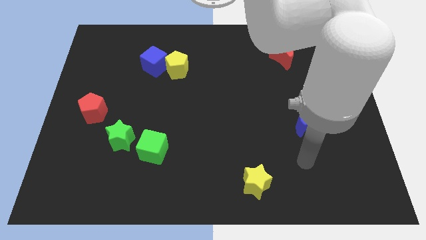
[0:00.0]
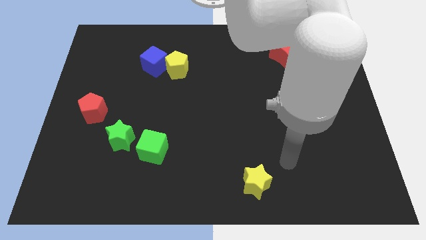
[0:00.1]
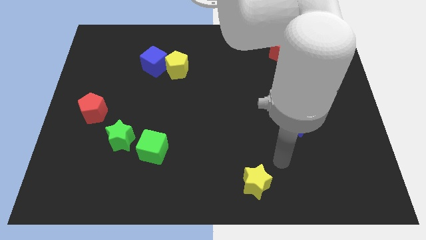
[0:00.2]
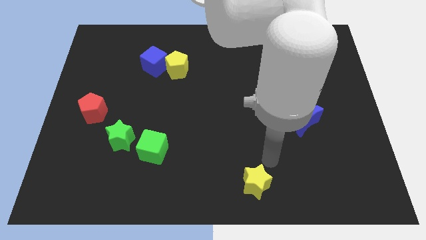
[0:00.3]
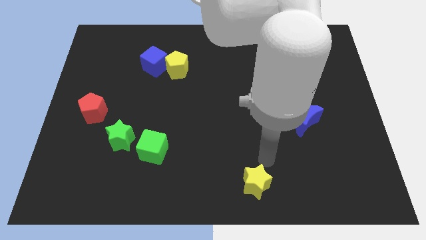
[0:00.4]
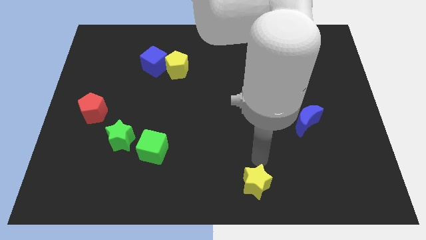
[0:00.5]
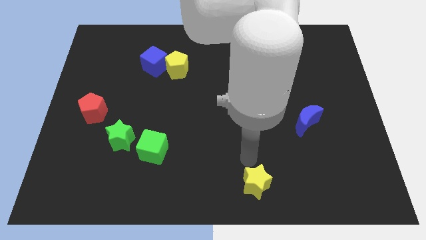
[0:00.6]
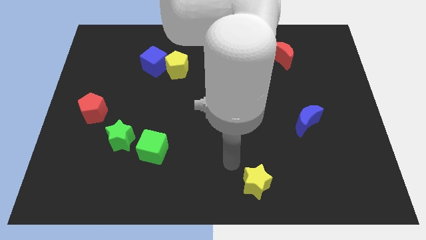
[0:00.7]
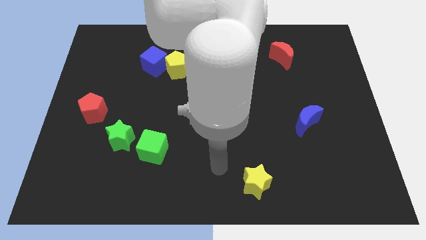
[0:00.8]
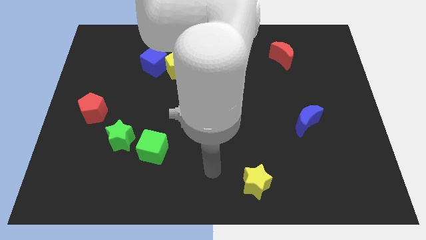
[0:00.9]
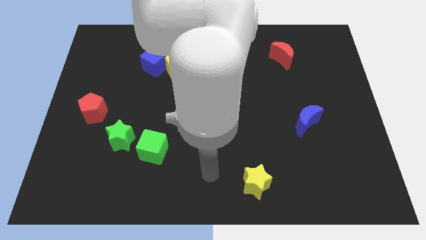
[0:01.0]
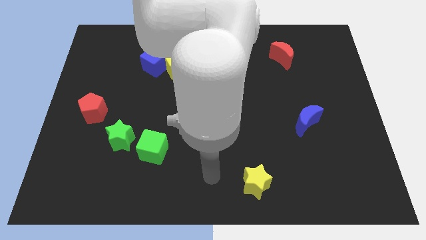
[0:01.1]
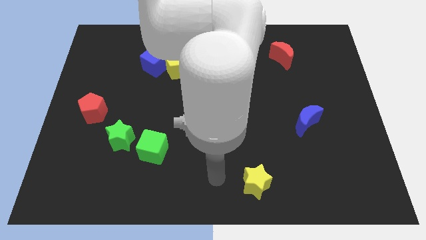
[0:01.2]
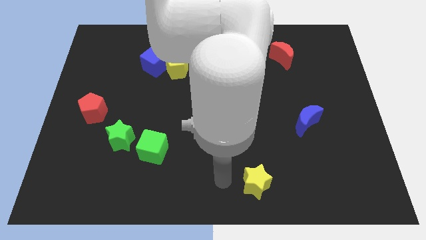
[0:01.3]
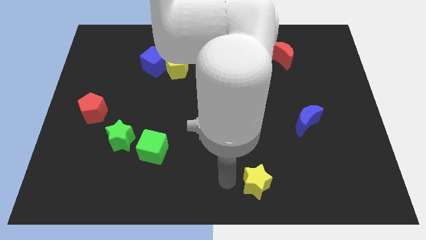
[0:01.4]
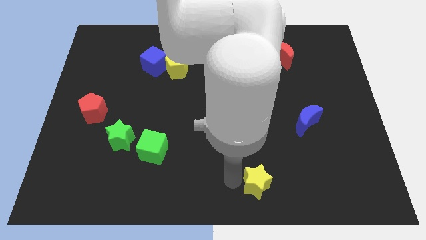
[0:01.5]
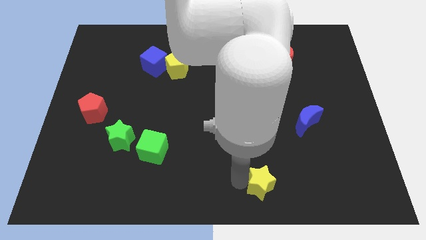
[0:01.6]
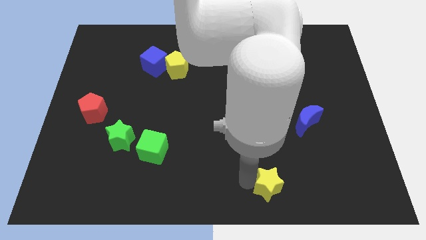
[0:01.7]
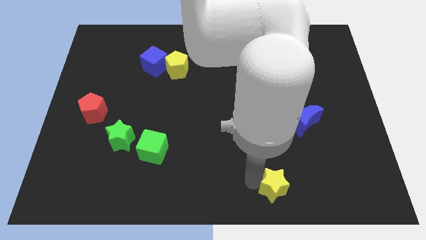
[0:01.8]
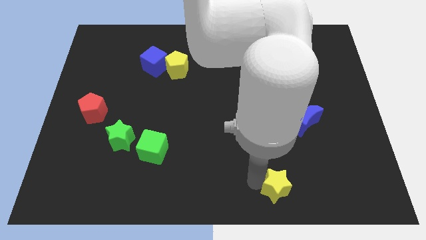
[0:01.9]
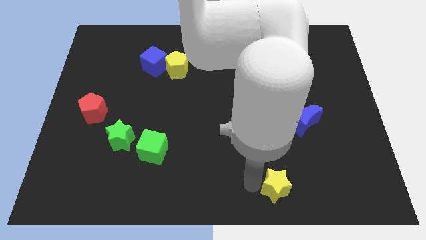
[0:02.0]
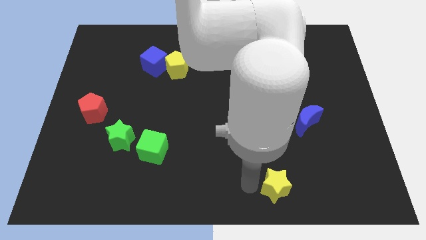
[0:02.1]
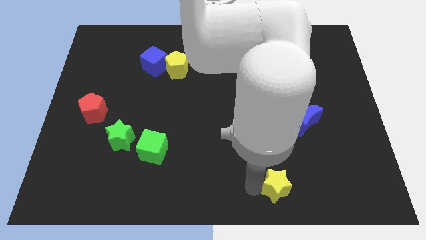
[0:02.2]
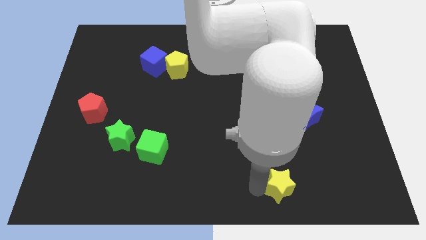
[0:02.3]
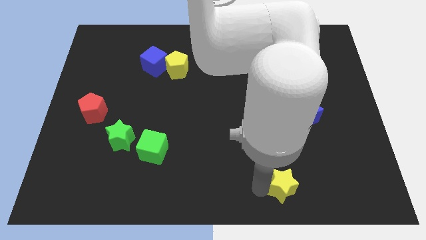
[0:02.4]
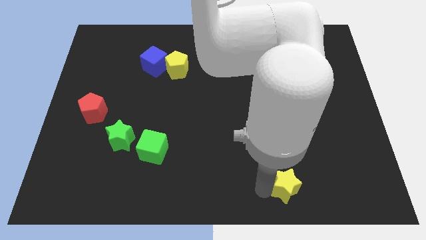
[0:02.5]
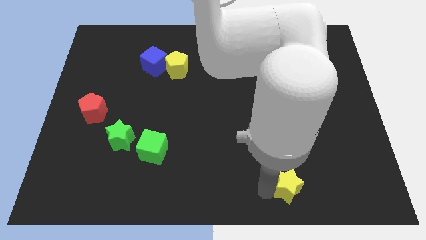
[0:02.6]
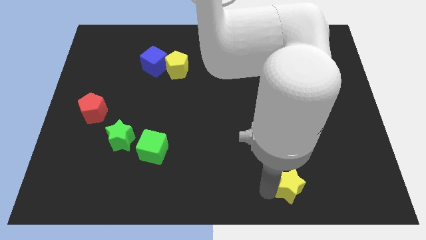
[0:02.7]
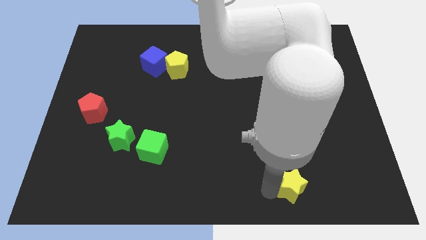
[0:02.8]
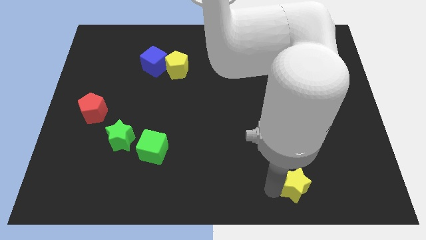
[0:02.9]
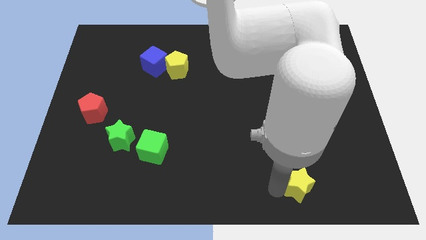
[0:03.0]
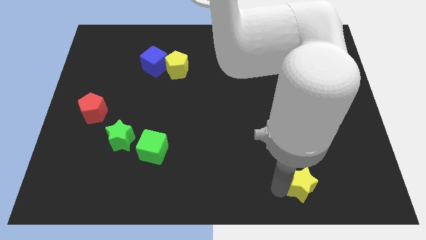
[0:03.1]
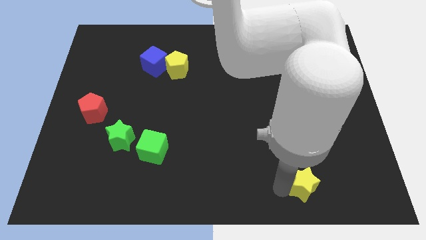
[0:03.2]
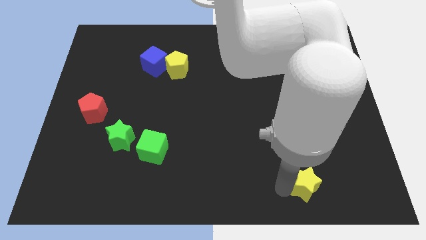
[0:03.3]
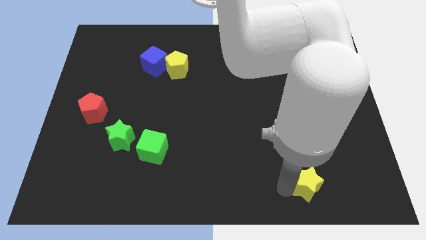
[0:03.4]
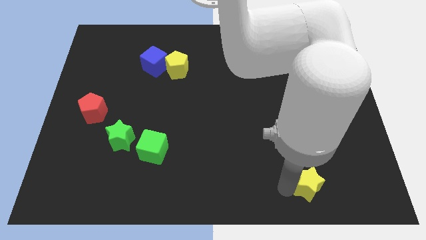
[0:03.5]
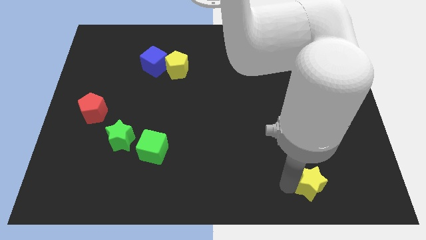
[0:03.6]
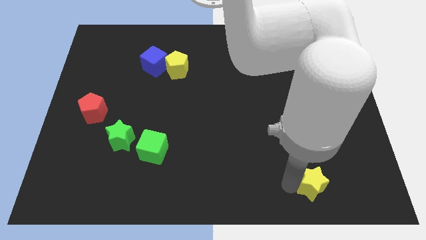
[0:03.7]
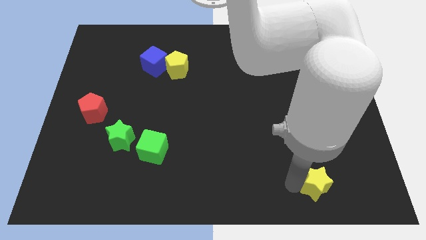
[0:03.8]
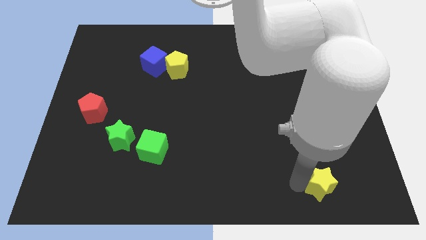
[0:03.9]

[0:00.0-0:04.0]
push yellow star

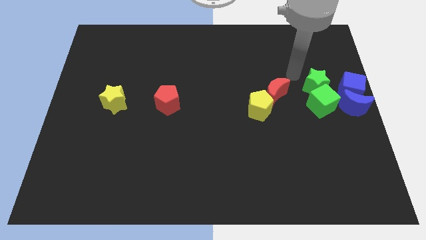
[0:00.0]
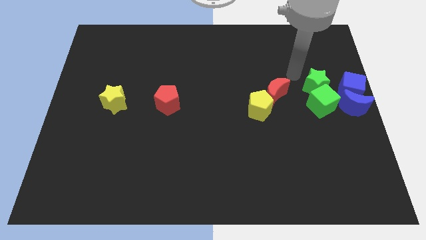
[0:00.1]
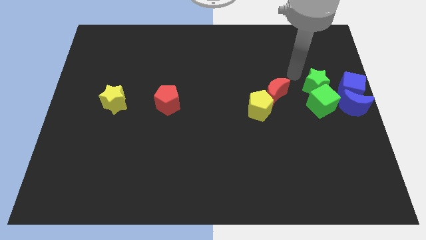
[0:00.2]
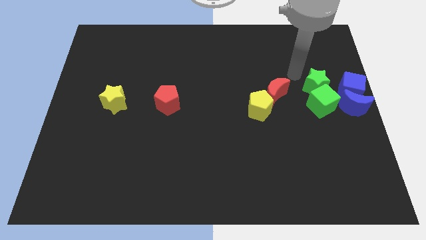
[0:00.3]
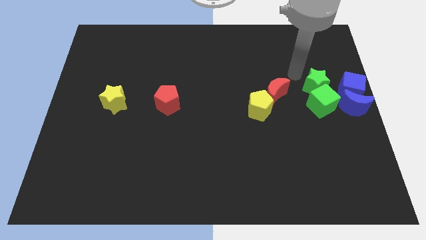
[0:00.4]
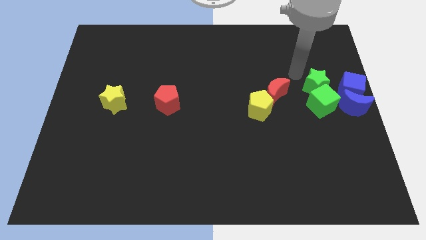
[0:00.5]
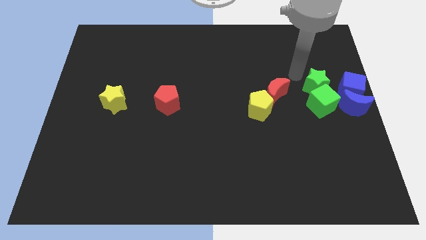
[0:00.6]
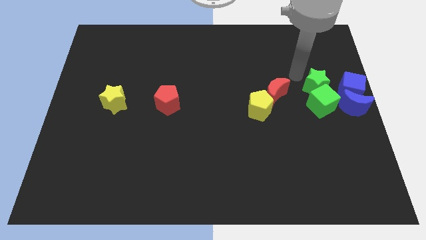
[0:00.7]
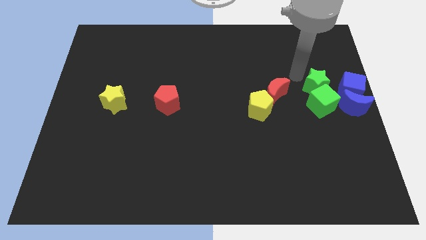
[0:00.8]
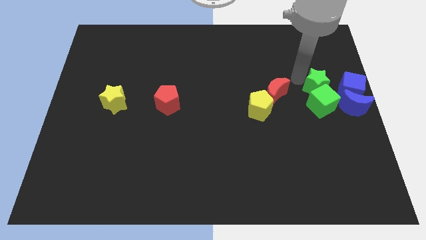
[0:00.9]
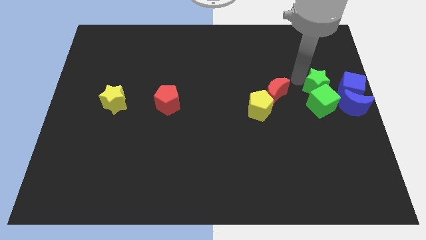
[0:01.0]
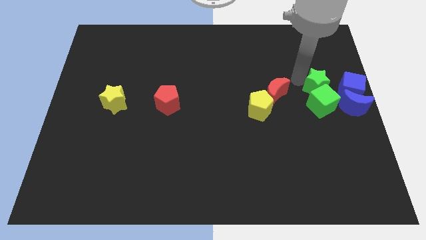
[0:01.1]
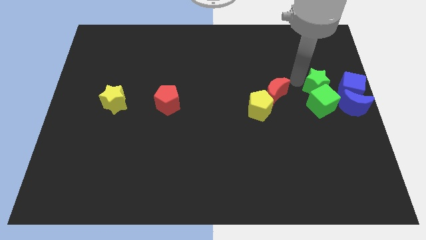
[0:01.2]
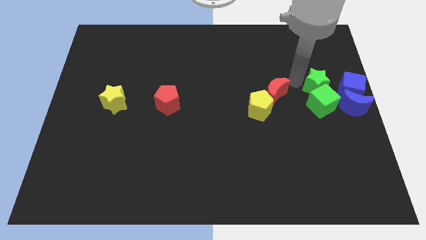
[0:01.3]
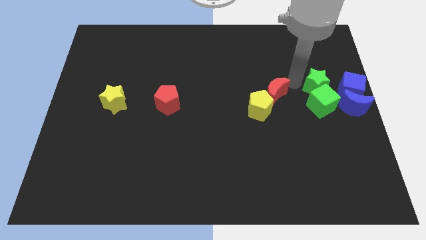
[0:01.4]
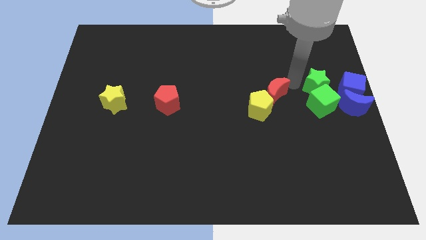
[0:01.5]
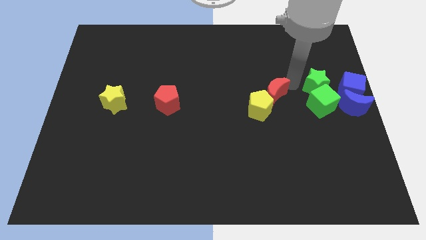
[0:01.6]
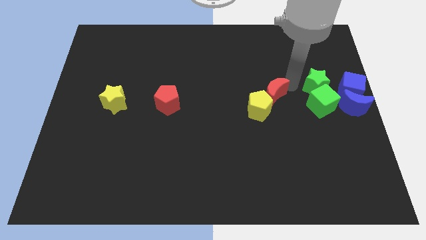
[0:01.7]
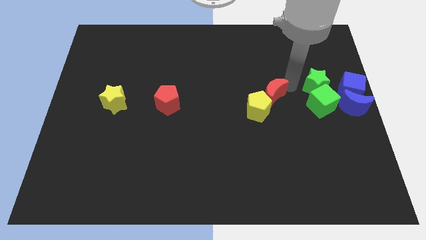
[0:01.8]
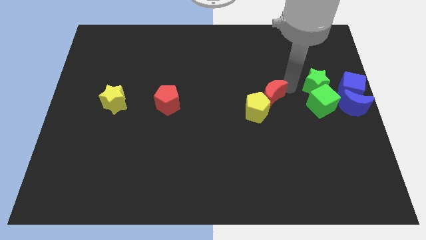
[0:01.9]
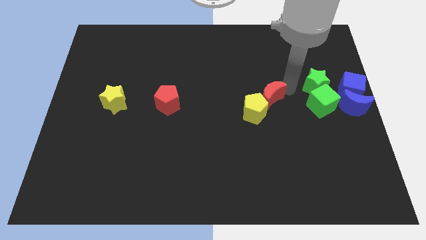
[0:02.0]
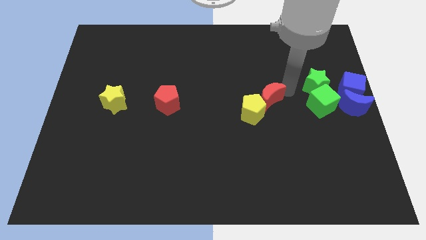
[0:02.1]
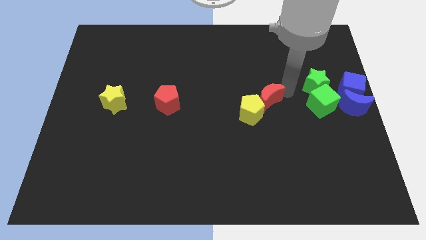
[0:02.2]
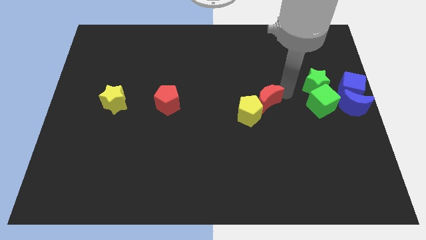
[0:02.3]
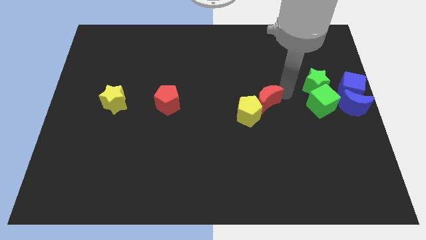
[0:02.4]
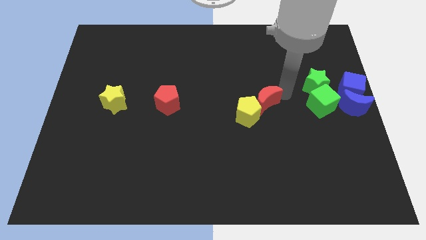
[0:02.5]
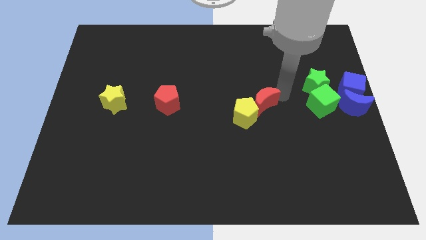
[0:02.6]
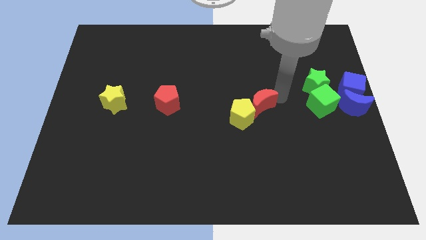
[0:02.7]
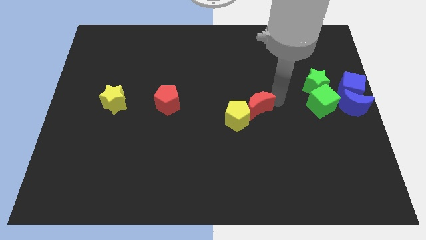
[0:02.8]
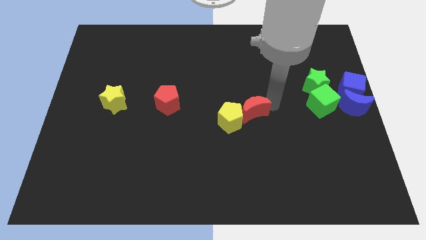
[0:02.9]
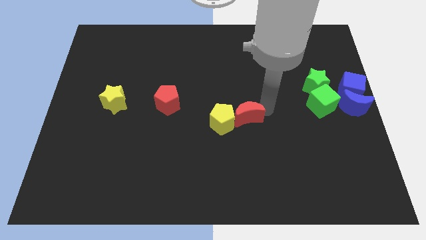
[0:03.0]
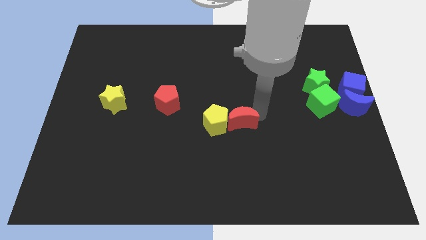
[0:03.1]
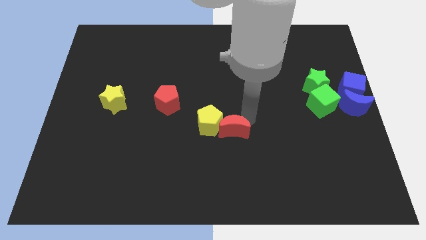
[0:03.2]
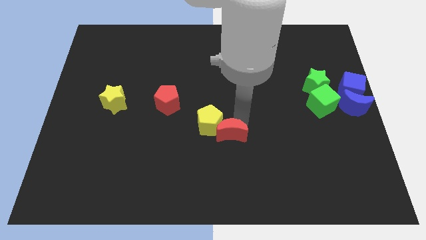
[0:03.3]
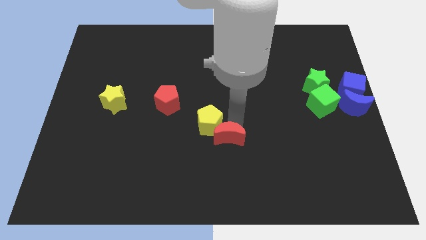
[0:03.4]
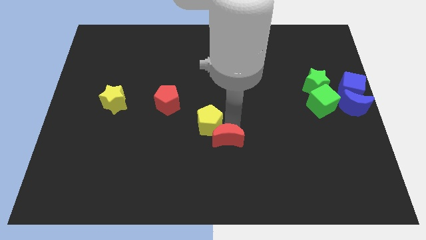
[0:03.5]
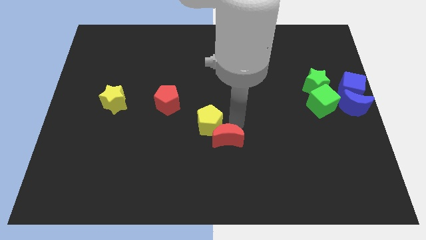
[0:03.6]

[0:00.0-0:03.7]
push the red moon slightly down with the help of yellow pentagon

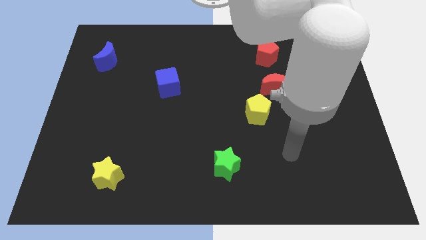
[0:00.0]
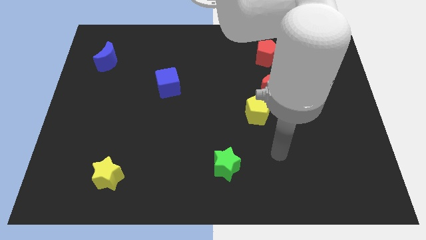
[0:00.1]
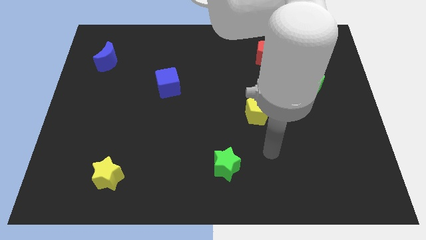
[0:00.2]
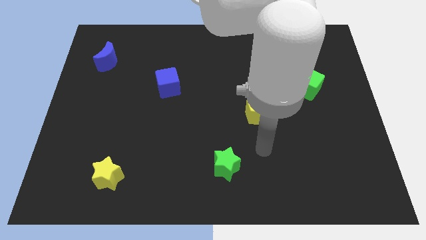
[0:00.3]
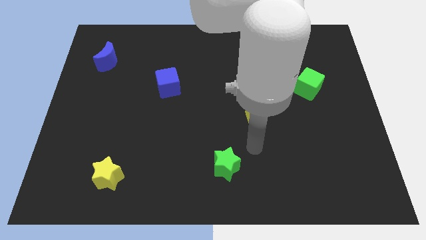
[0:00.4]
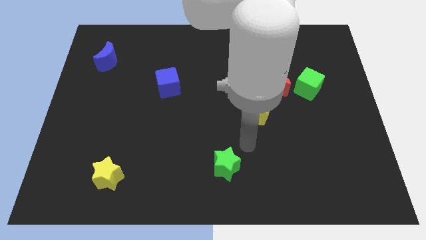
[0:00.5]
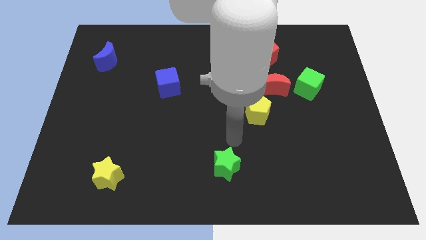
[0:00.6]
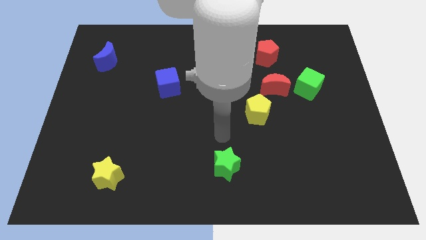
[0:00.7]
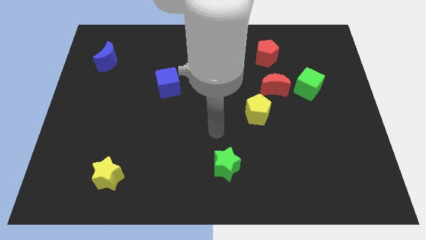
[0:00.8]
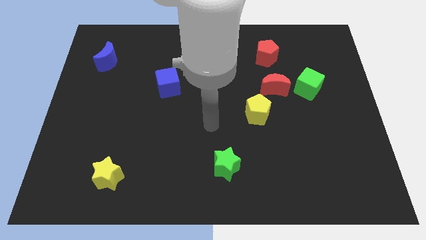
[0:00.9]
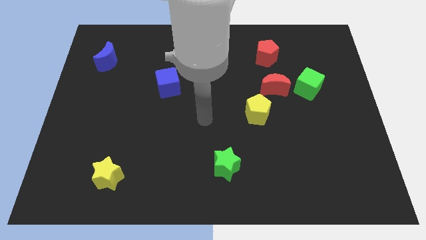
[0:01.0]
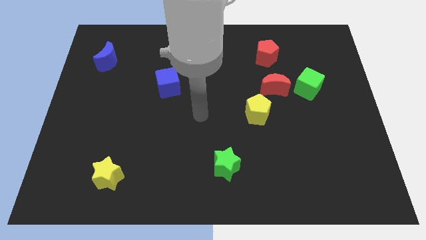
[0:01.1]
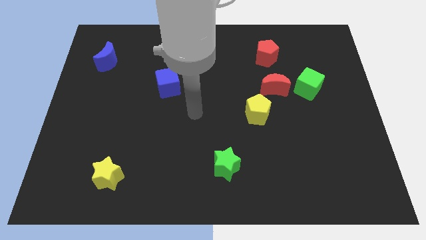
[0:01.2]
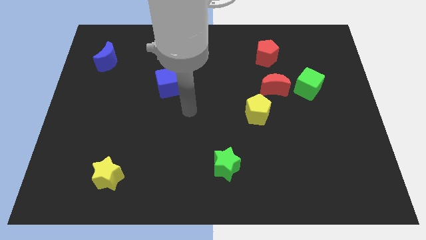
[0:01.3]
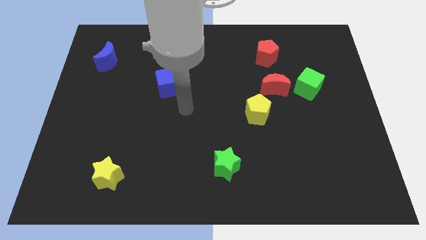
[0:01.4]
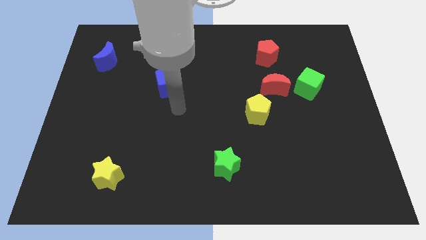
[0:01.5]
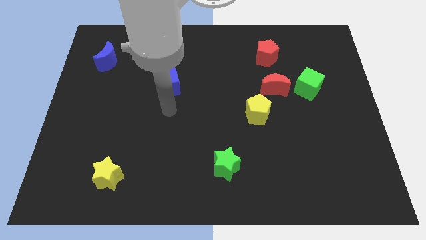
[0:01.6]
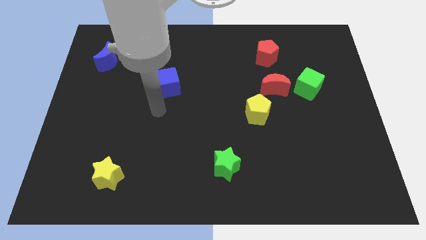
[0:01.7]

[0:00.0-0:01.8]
move your arm towards the blue cube
